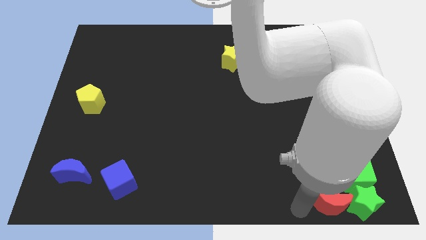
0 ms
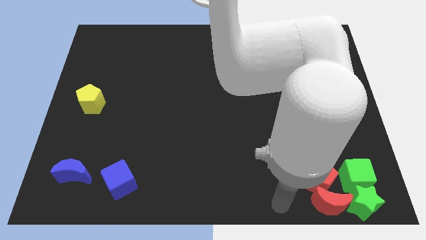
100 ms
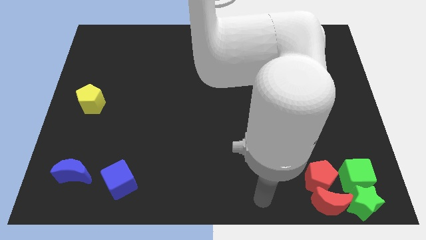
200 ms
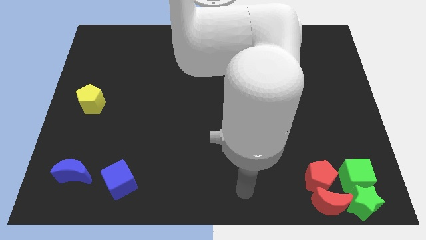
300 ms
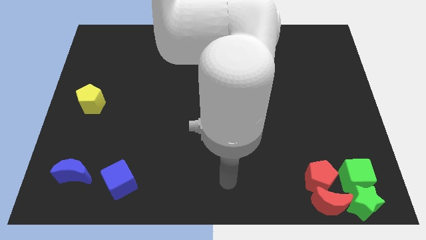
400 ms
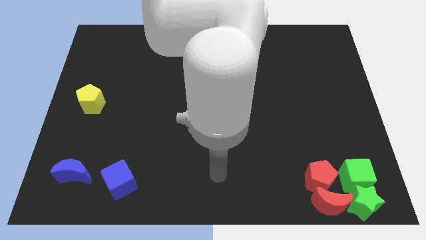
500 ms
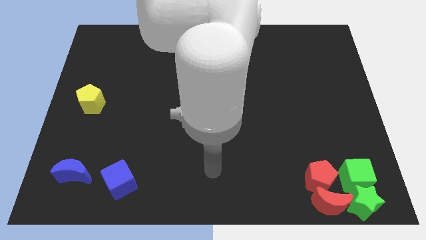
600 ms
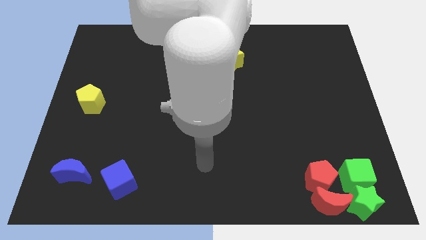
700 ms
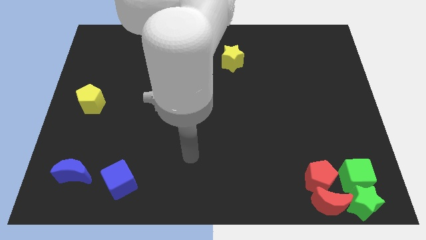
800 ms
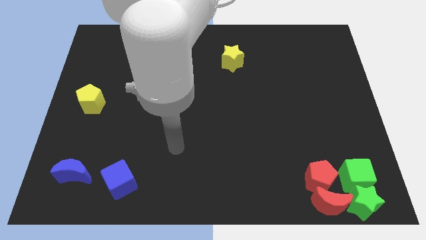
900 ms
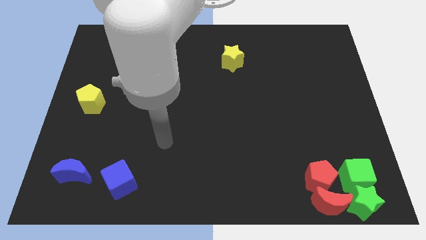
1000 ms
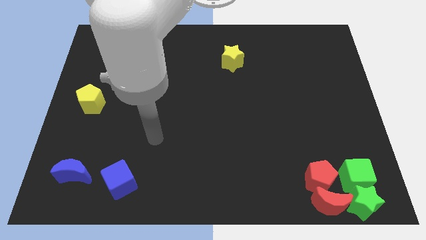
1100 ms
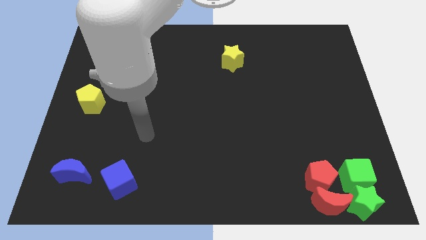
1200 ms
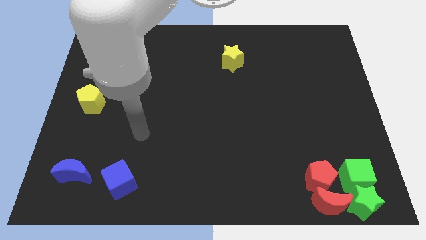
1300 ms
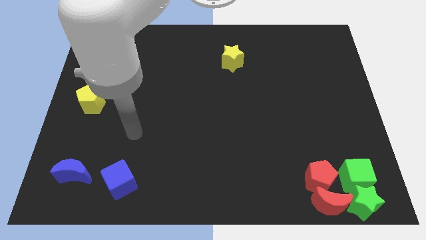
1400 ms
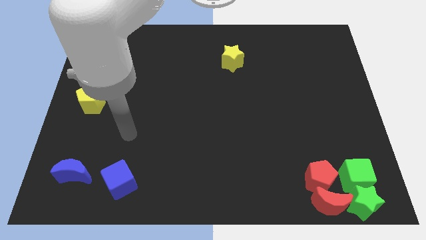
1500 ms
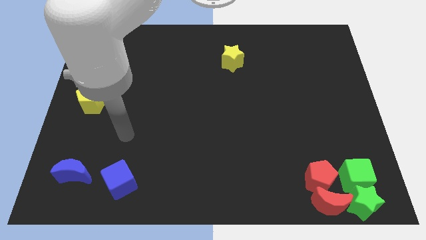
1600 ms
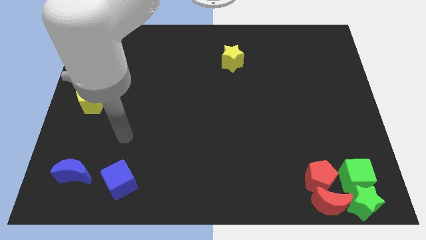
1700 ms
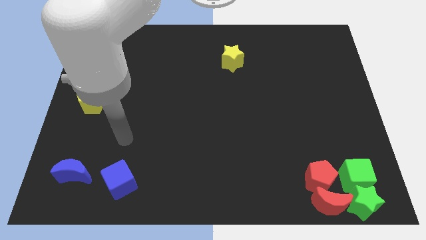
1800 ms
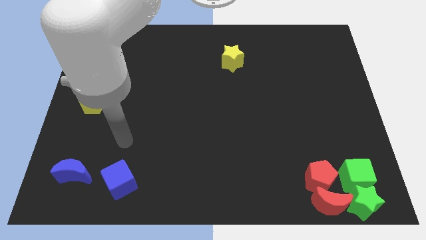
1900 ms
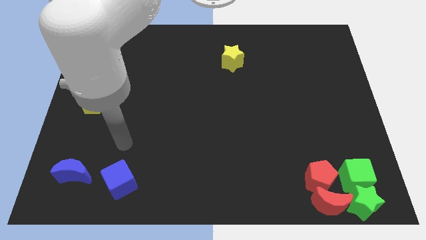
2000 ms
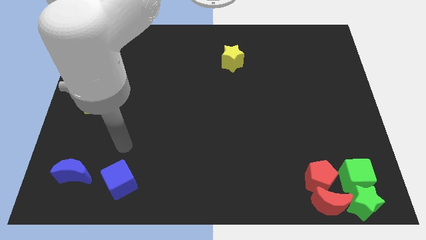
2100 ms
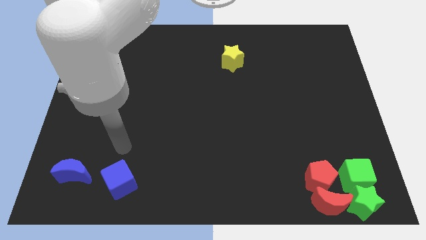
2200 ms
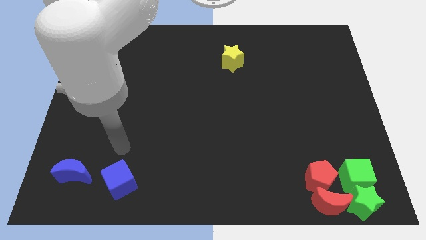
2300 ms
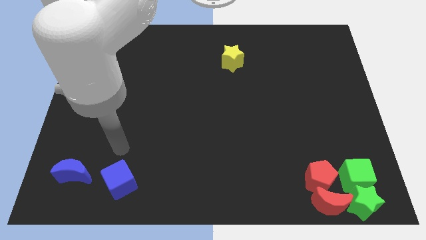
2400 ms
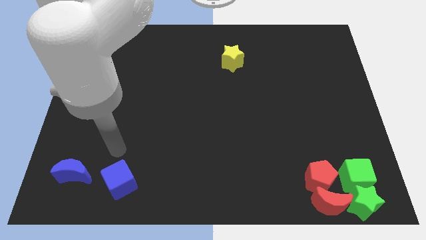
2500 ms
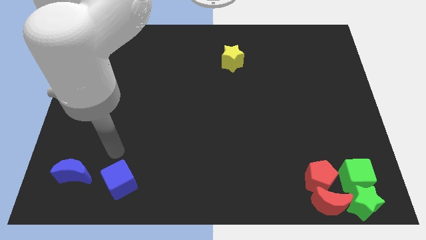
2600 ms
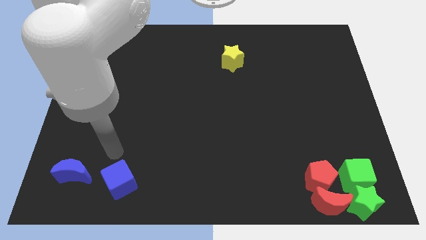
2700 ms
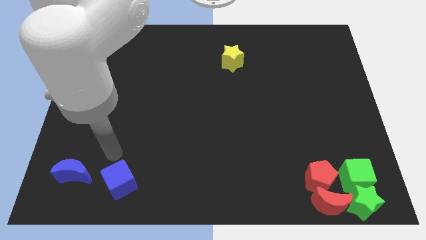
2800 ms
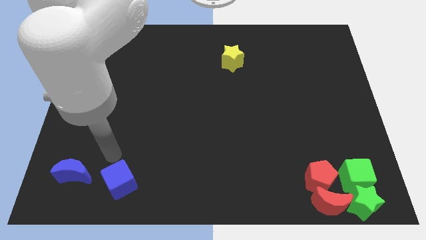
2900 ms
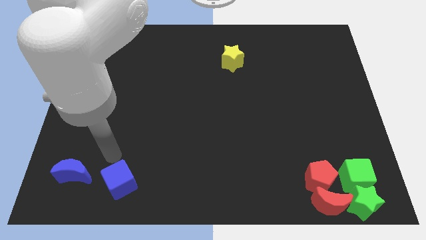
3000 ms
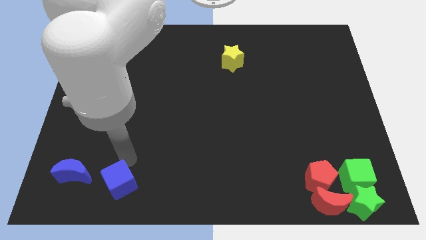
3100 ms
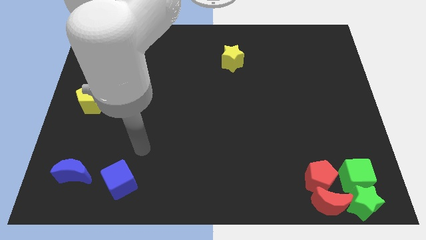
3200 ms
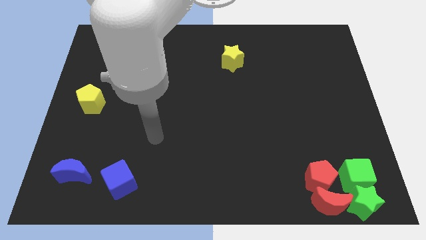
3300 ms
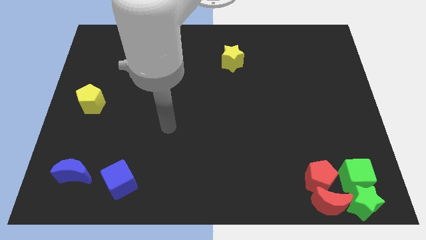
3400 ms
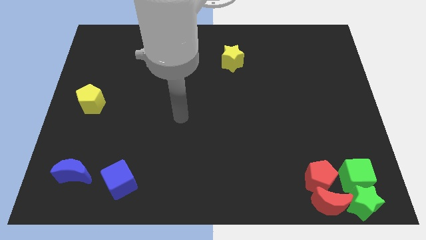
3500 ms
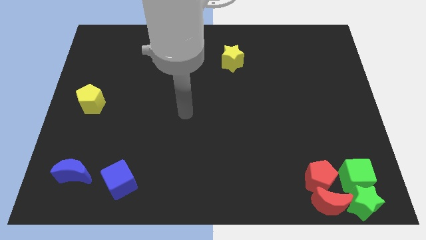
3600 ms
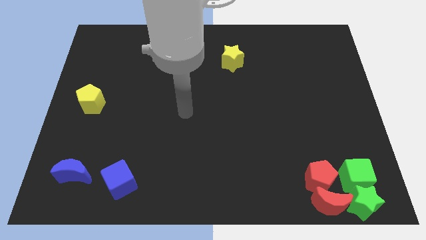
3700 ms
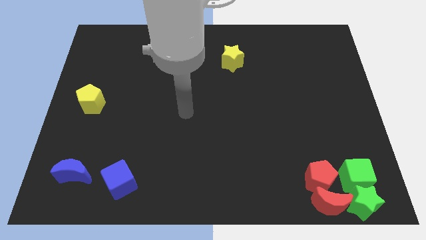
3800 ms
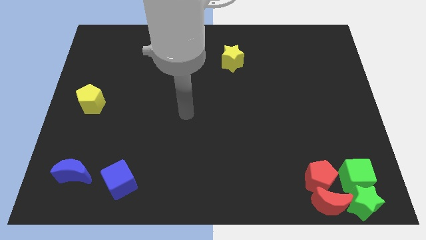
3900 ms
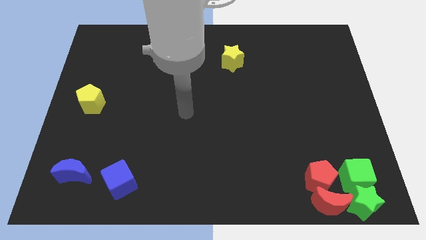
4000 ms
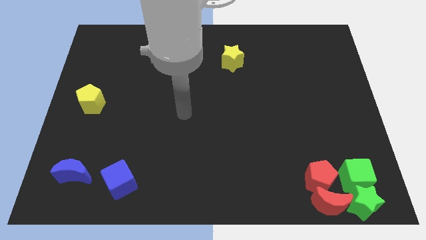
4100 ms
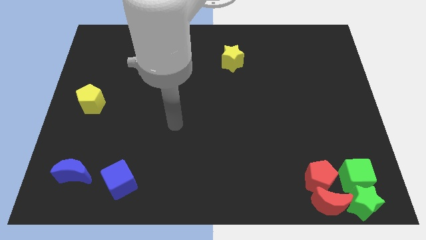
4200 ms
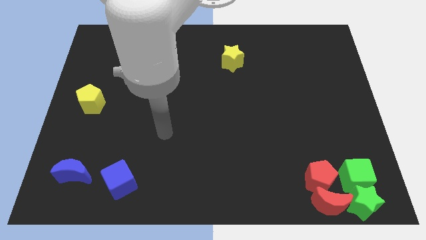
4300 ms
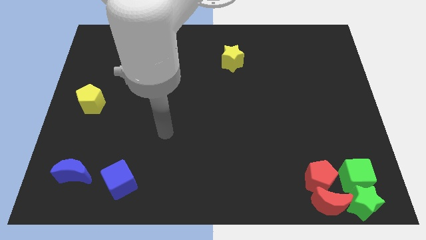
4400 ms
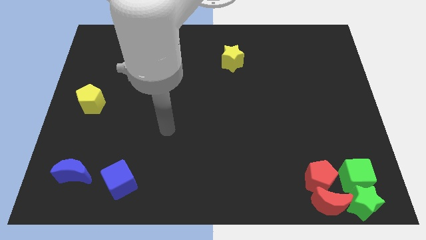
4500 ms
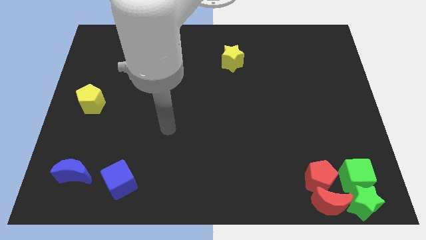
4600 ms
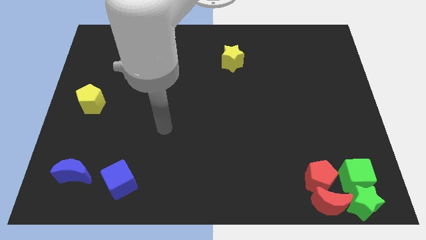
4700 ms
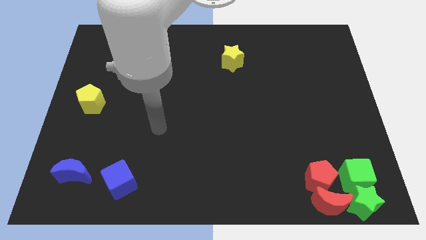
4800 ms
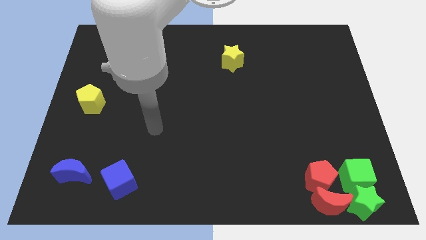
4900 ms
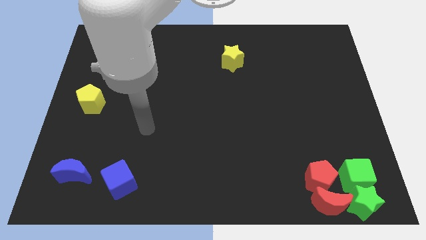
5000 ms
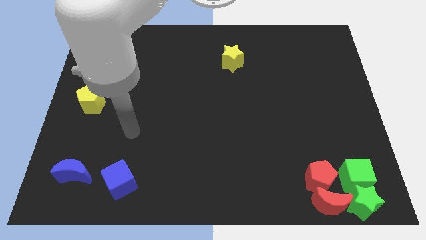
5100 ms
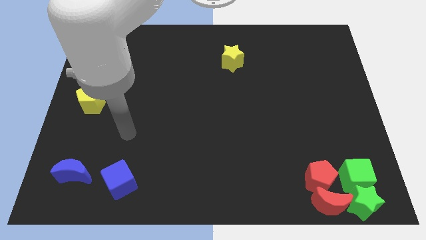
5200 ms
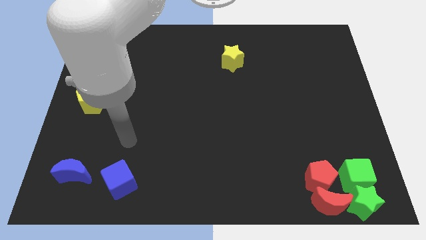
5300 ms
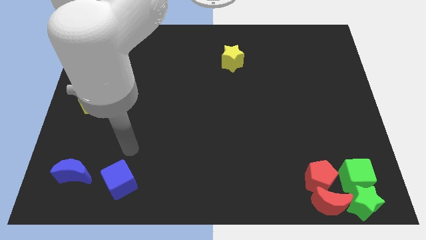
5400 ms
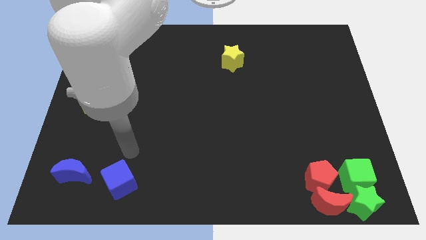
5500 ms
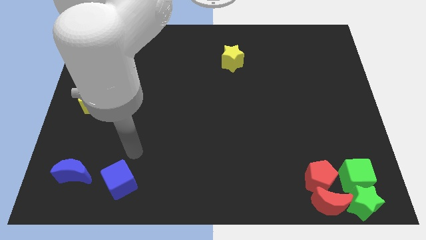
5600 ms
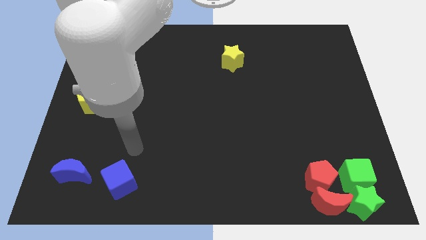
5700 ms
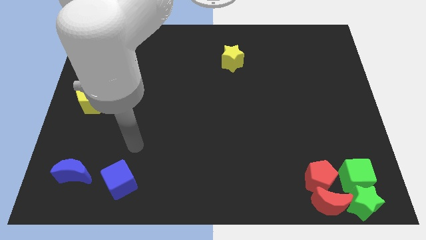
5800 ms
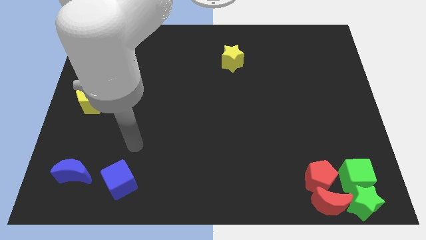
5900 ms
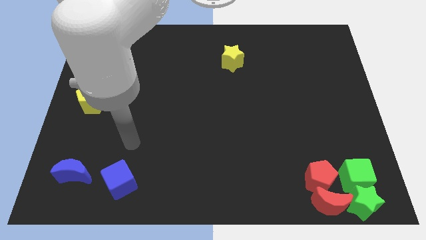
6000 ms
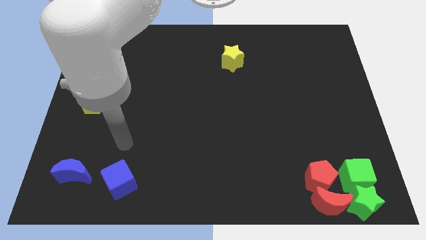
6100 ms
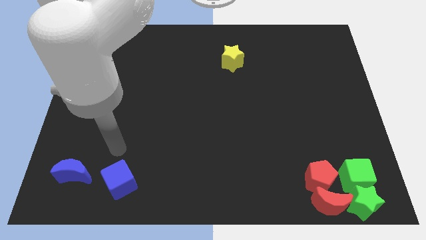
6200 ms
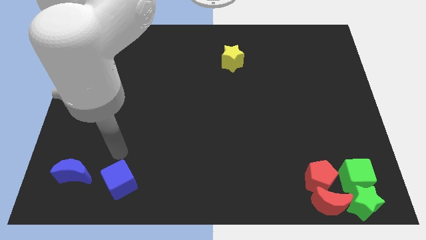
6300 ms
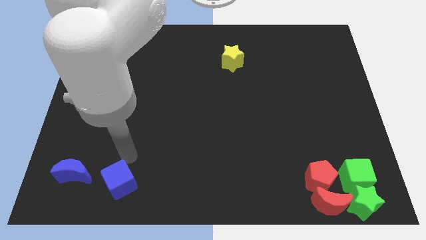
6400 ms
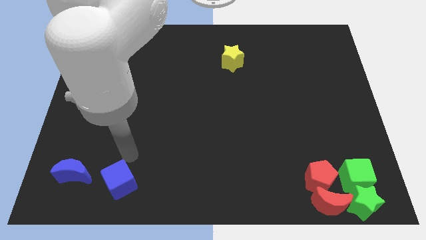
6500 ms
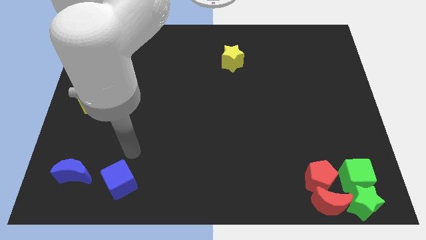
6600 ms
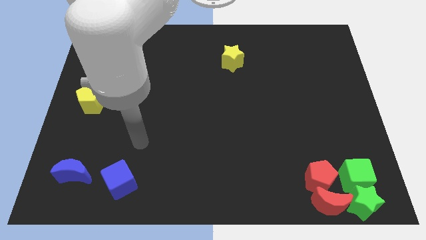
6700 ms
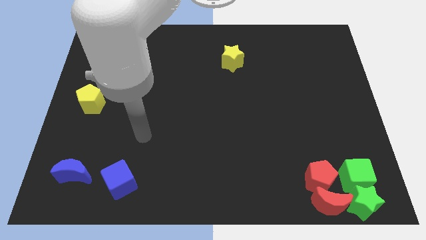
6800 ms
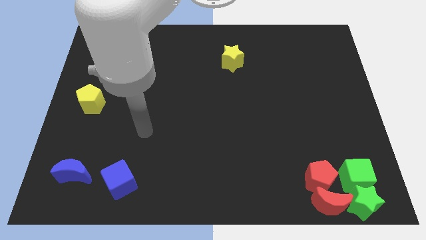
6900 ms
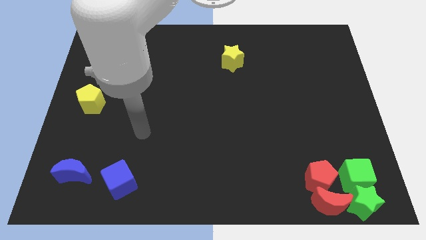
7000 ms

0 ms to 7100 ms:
move your arm away from the red moon

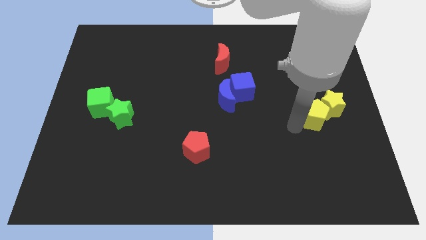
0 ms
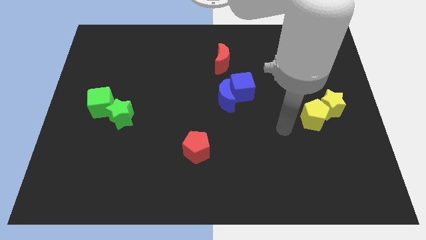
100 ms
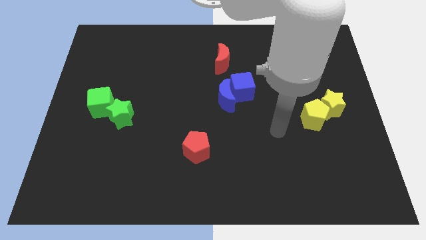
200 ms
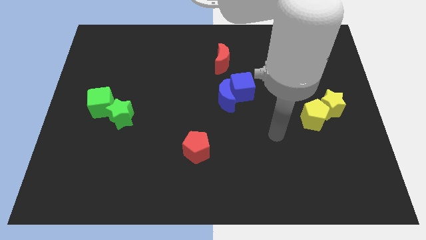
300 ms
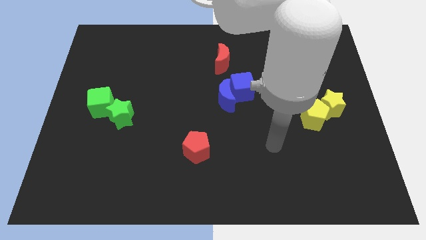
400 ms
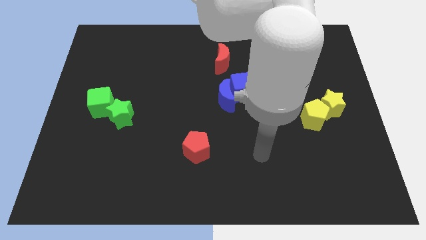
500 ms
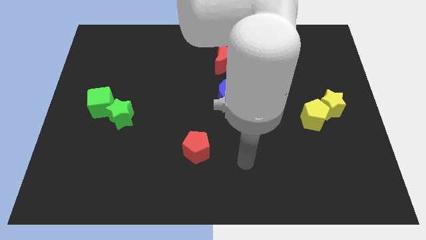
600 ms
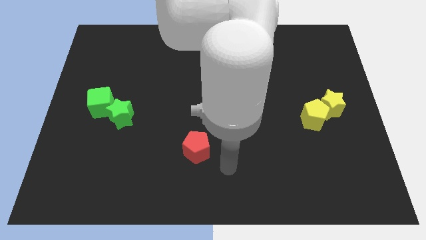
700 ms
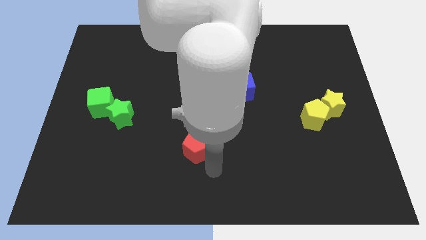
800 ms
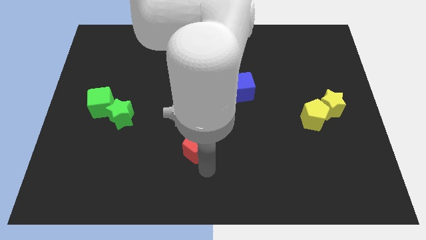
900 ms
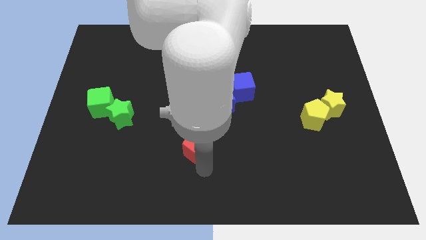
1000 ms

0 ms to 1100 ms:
move your arm away from yellow pentagon

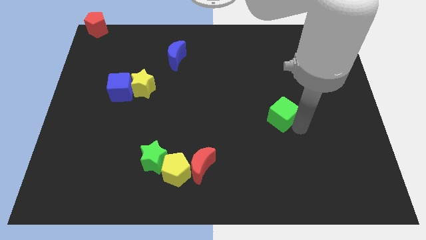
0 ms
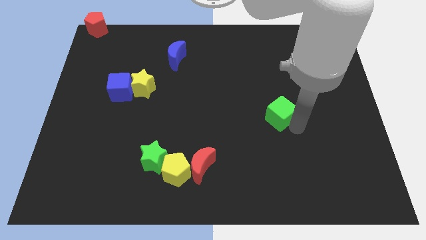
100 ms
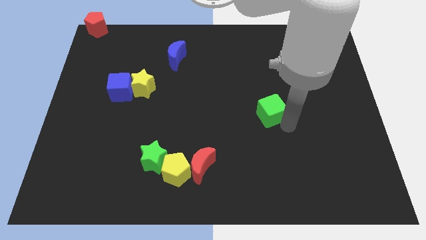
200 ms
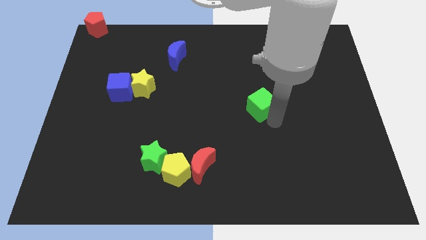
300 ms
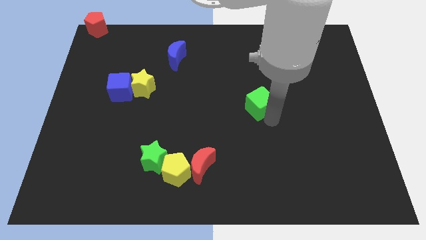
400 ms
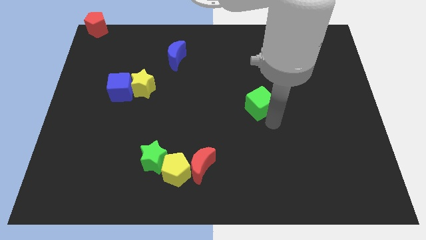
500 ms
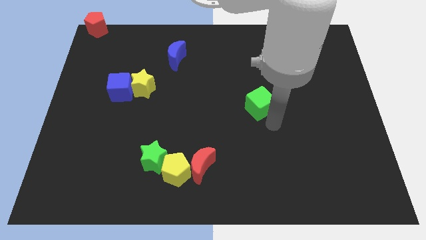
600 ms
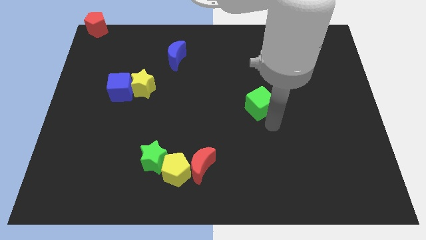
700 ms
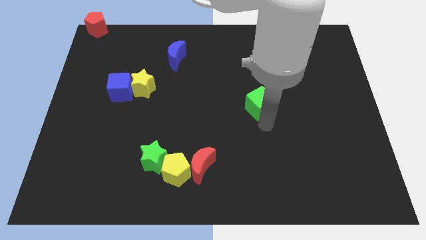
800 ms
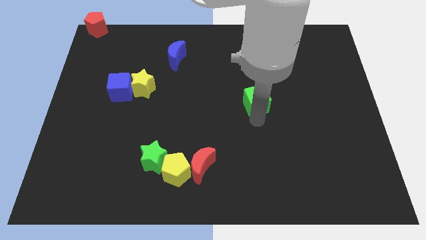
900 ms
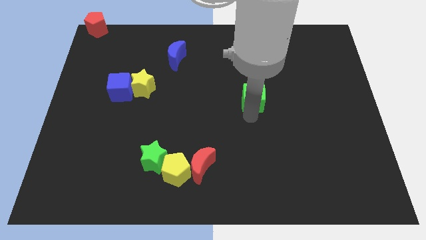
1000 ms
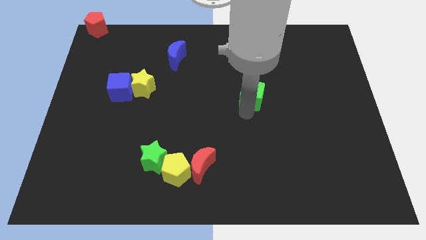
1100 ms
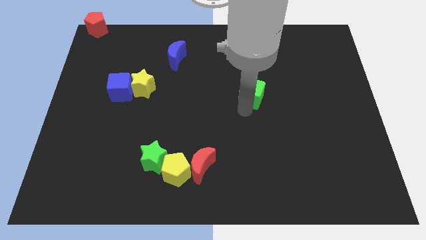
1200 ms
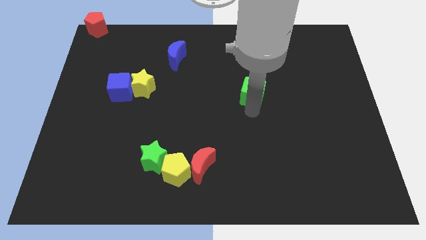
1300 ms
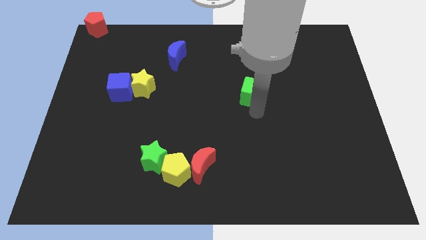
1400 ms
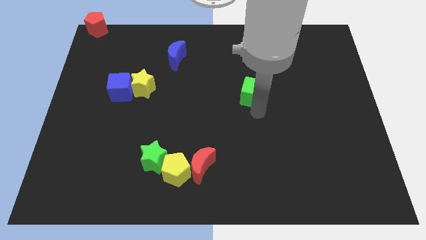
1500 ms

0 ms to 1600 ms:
place green cube to the center of the board
